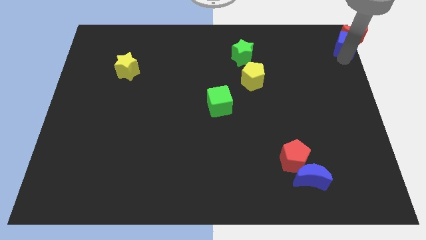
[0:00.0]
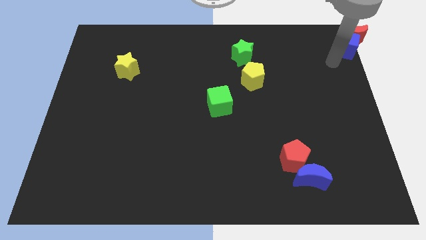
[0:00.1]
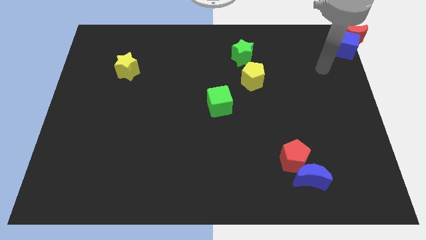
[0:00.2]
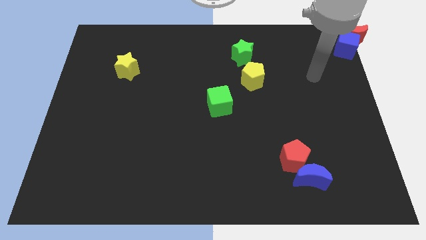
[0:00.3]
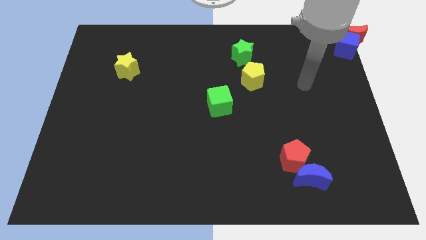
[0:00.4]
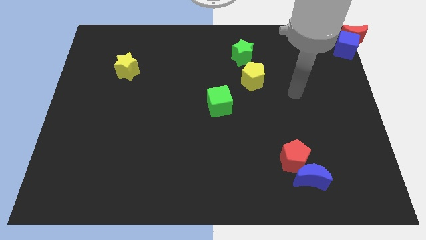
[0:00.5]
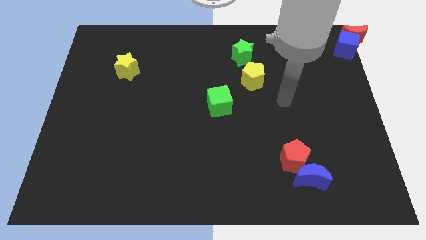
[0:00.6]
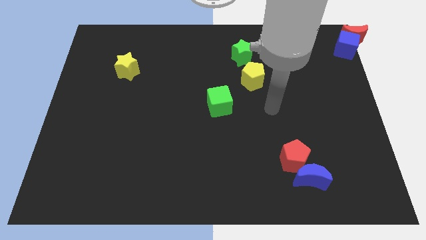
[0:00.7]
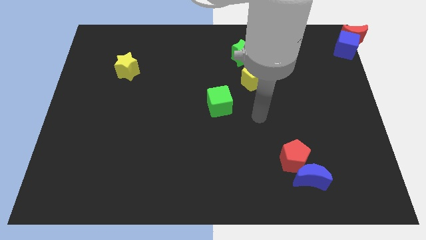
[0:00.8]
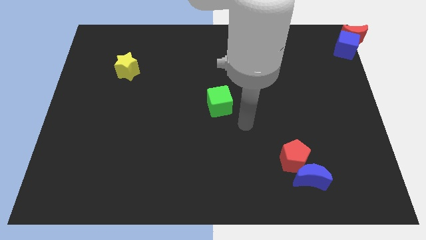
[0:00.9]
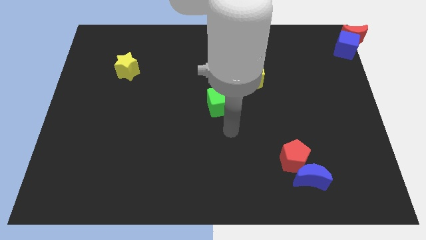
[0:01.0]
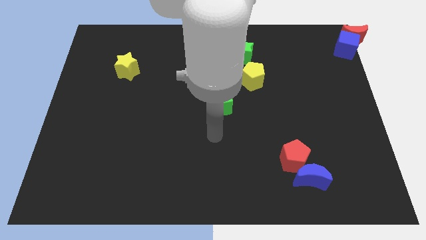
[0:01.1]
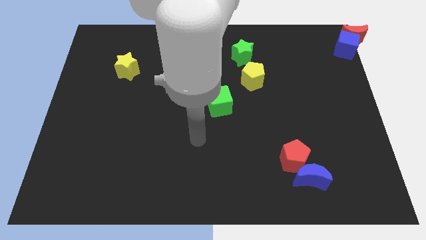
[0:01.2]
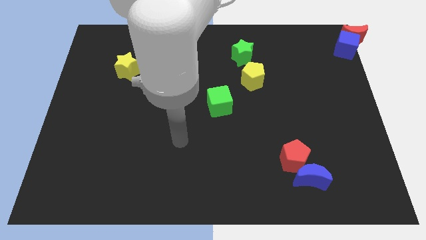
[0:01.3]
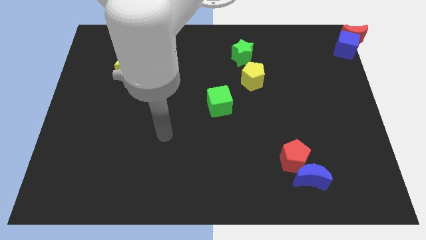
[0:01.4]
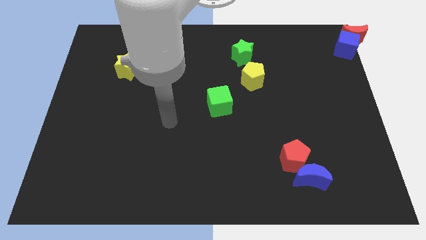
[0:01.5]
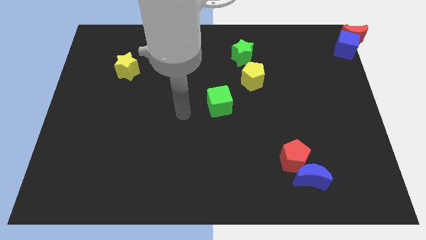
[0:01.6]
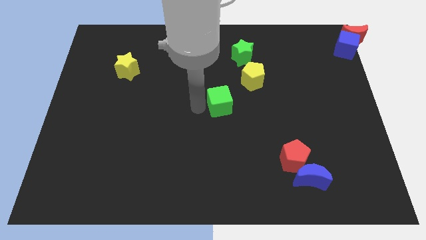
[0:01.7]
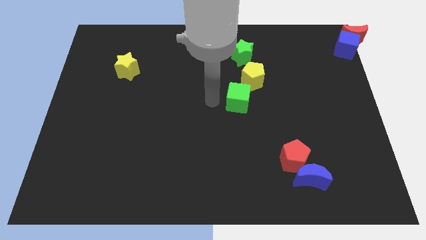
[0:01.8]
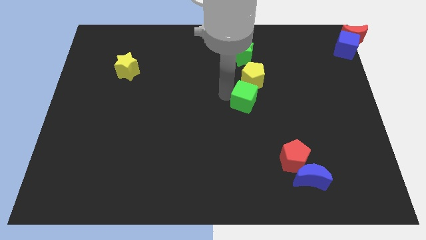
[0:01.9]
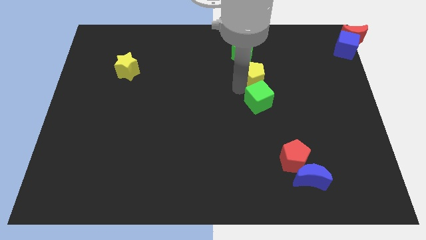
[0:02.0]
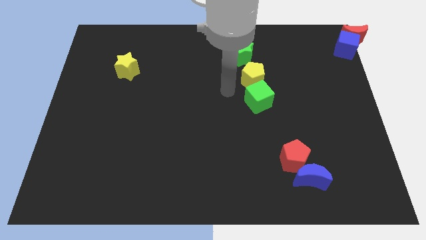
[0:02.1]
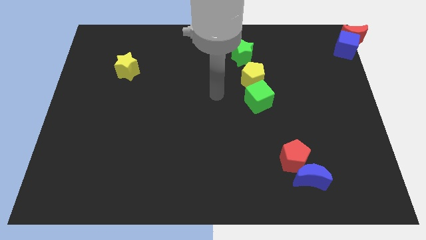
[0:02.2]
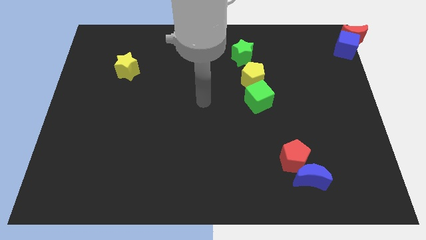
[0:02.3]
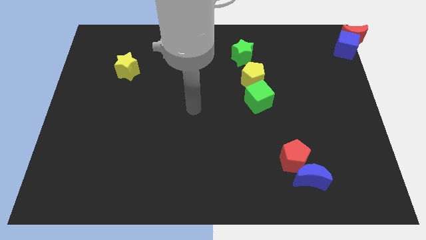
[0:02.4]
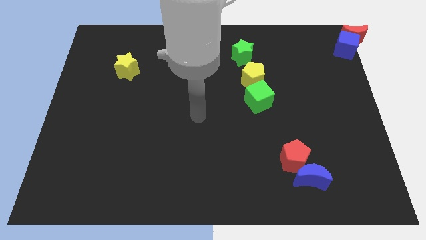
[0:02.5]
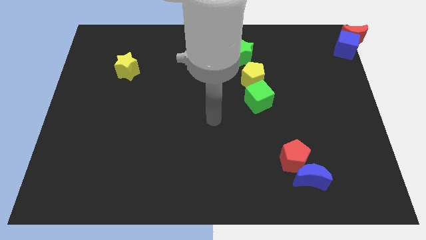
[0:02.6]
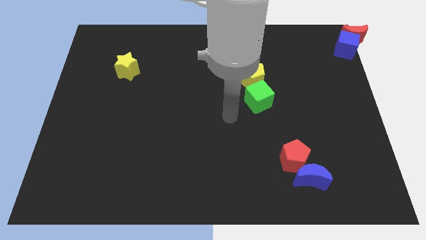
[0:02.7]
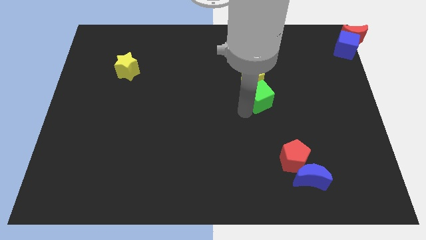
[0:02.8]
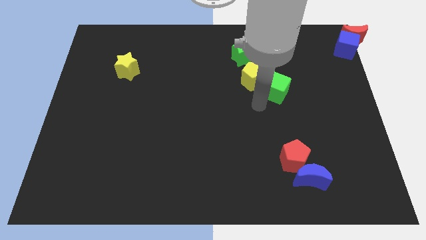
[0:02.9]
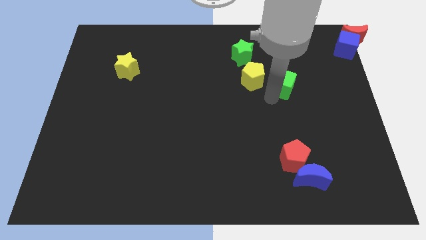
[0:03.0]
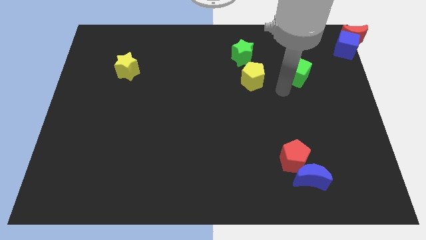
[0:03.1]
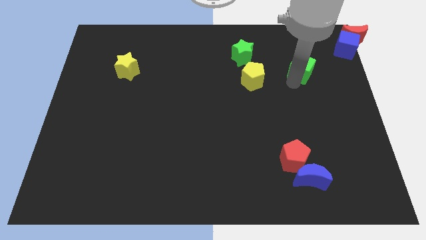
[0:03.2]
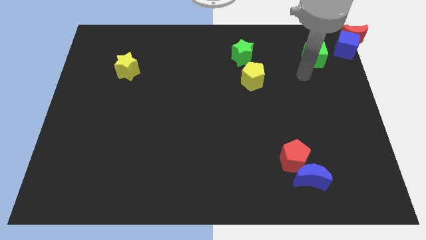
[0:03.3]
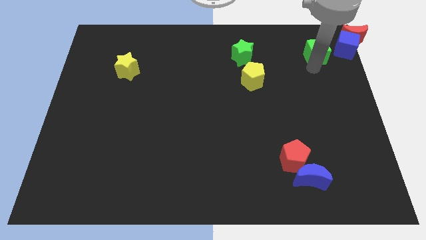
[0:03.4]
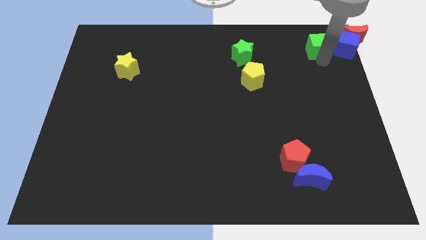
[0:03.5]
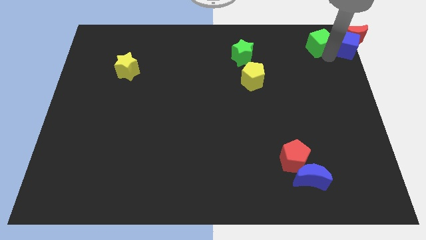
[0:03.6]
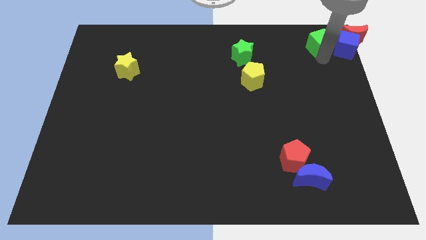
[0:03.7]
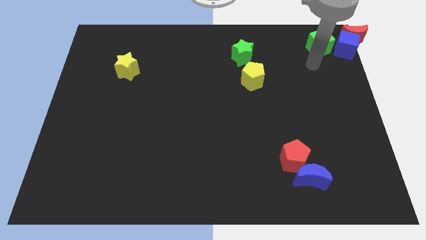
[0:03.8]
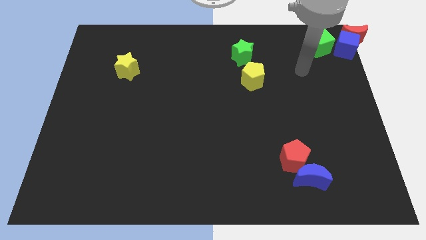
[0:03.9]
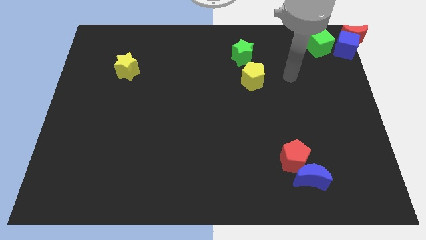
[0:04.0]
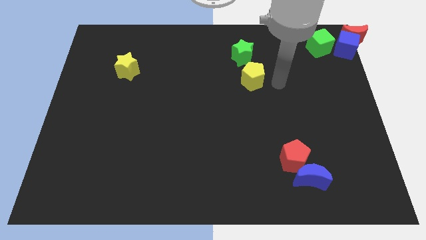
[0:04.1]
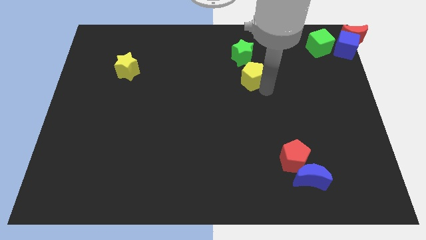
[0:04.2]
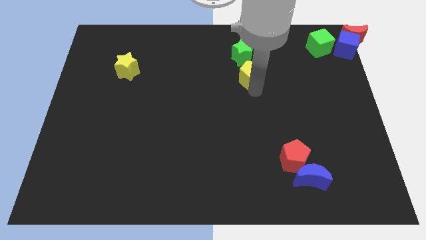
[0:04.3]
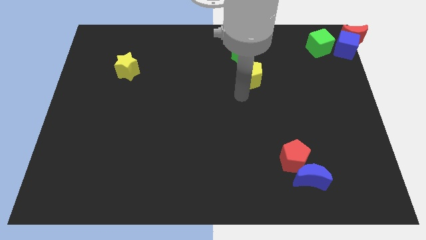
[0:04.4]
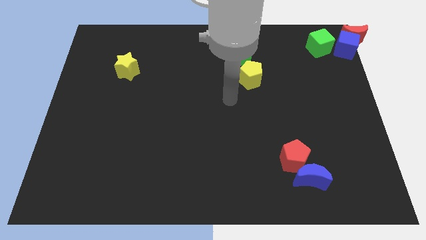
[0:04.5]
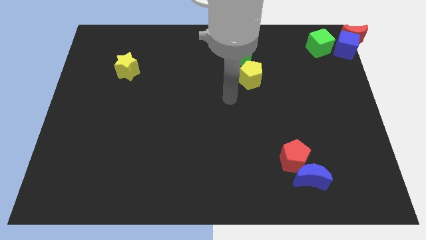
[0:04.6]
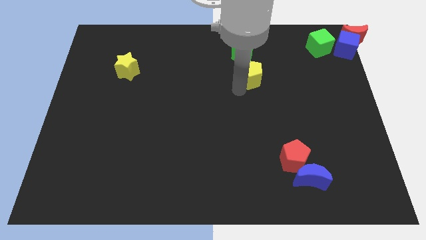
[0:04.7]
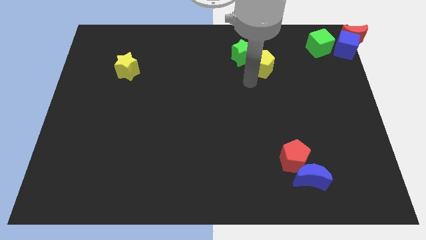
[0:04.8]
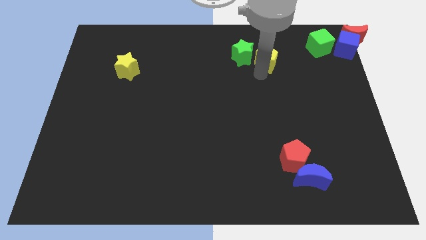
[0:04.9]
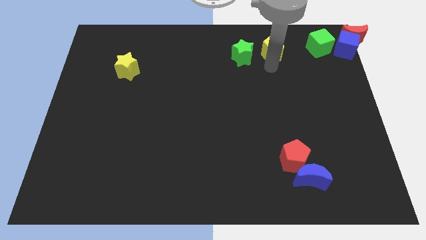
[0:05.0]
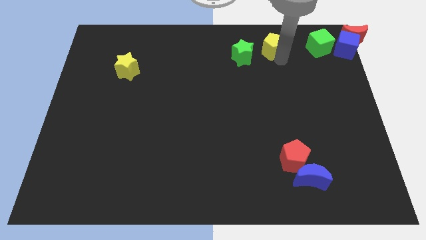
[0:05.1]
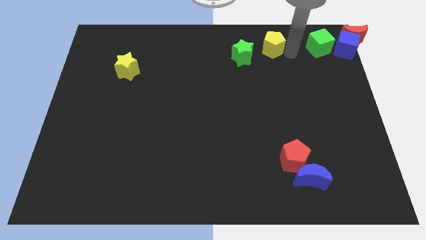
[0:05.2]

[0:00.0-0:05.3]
push the green cube to the left side of the blue cube

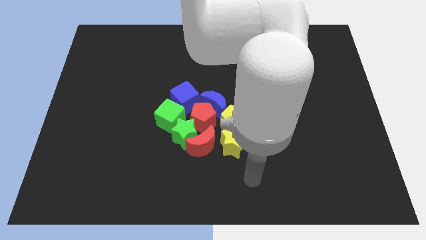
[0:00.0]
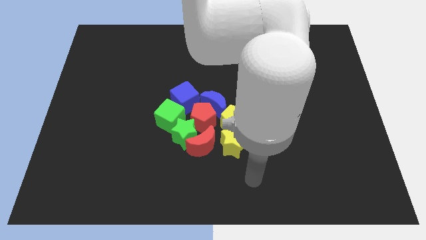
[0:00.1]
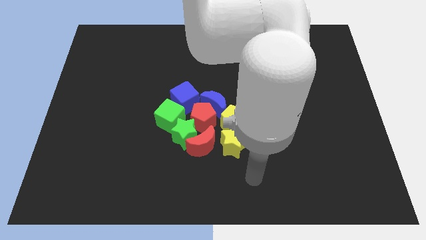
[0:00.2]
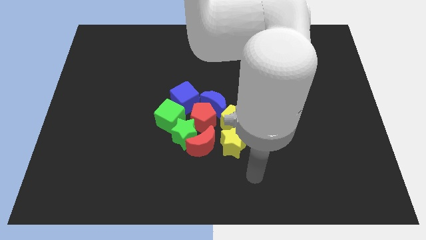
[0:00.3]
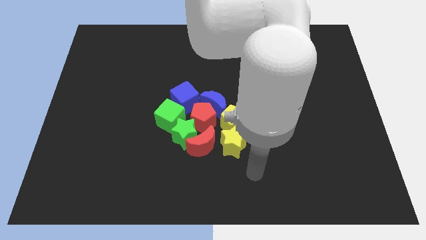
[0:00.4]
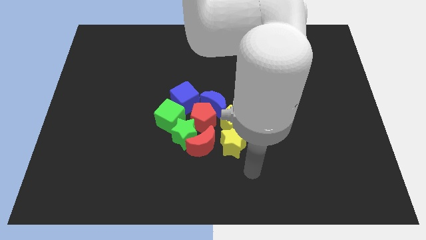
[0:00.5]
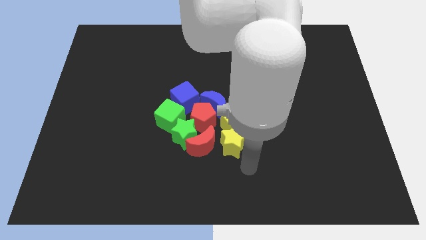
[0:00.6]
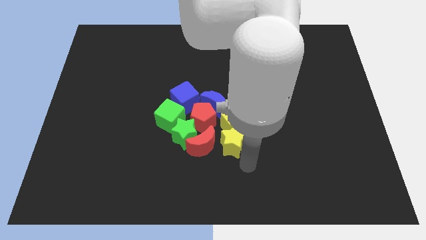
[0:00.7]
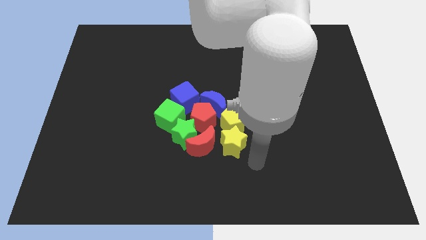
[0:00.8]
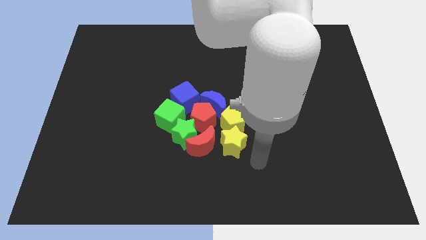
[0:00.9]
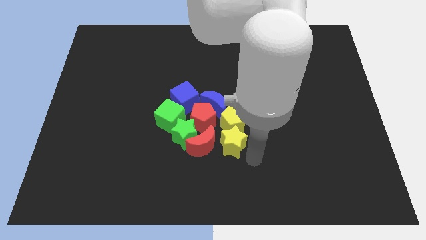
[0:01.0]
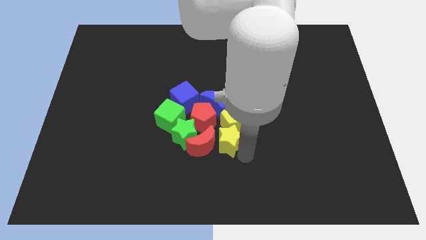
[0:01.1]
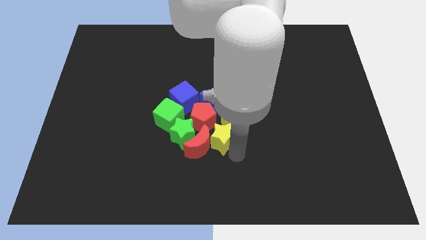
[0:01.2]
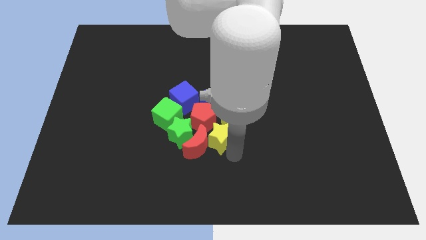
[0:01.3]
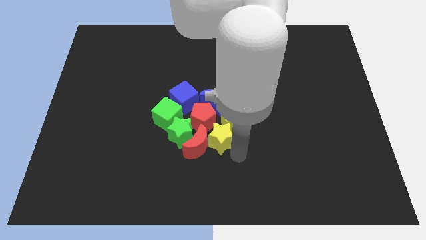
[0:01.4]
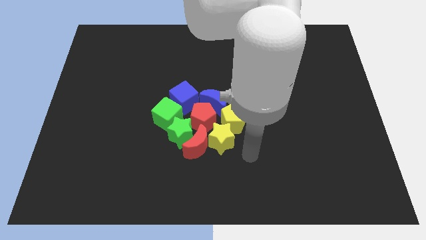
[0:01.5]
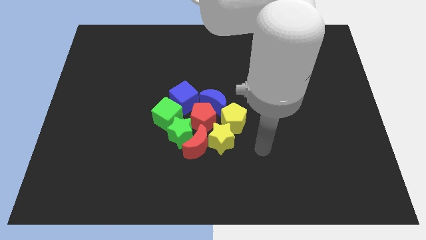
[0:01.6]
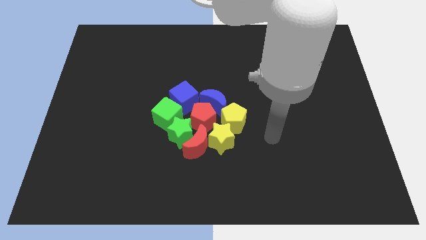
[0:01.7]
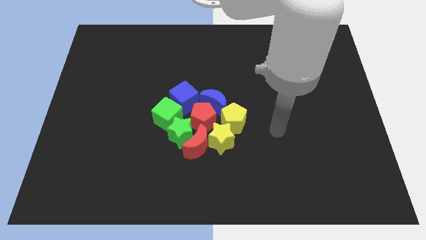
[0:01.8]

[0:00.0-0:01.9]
move the yellow star into the red crescent

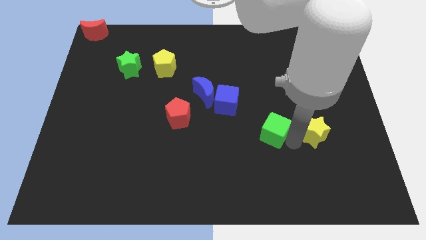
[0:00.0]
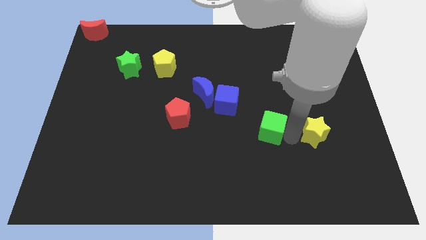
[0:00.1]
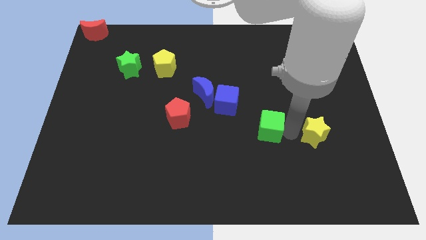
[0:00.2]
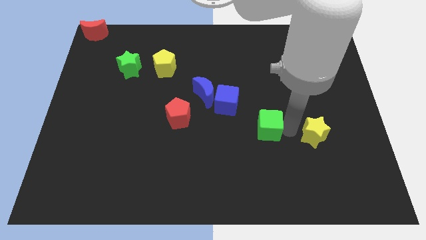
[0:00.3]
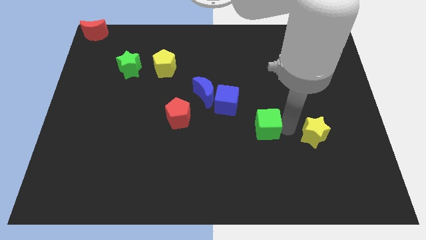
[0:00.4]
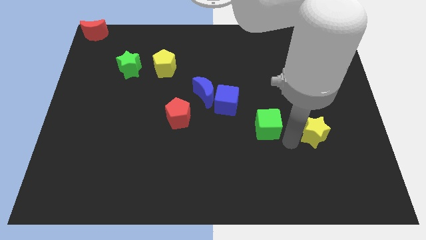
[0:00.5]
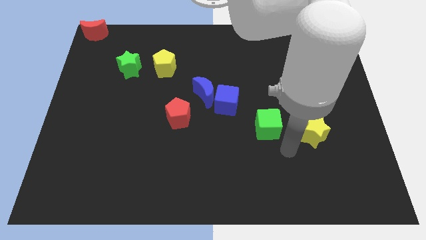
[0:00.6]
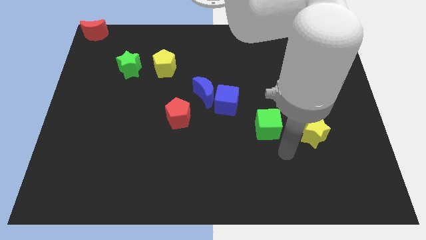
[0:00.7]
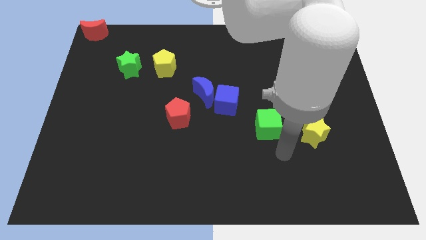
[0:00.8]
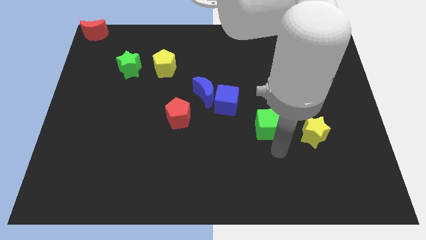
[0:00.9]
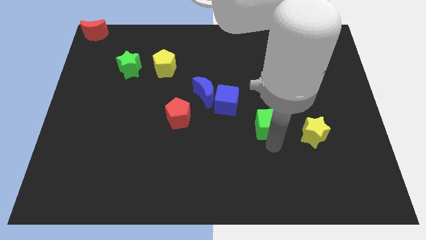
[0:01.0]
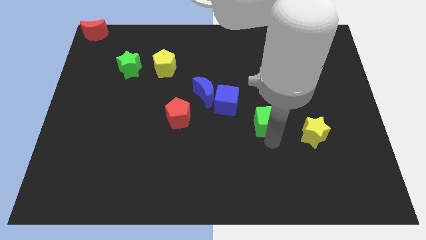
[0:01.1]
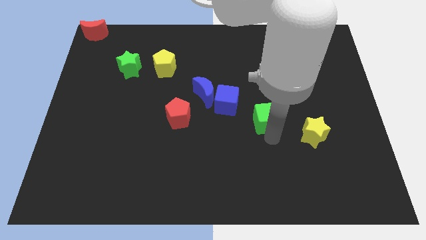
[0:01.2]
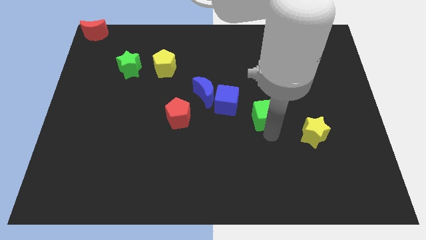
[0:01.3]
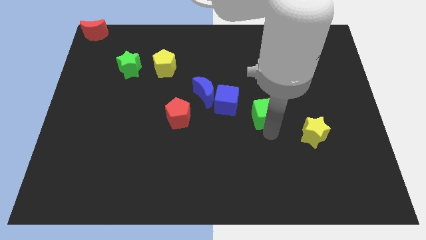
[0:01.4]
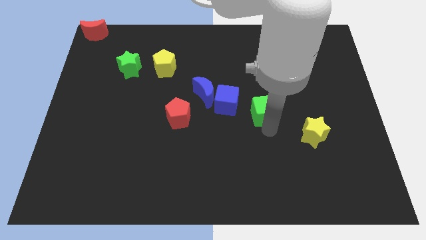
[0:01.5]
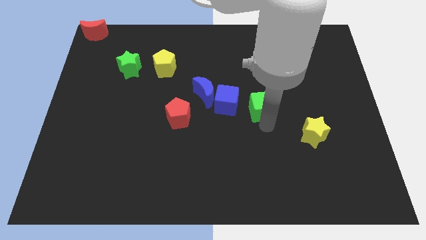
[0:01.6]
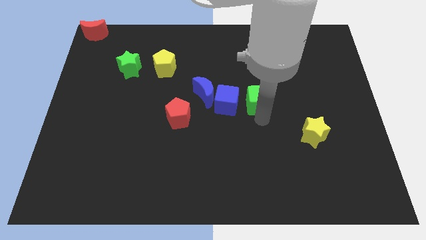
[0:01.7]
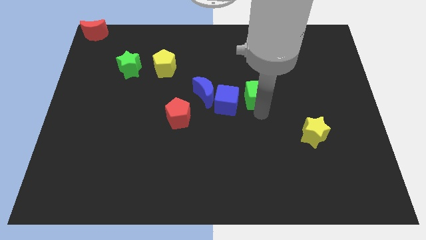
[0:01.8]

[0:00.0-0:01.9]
push green cube beside blue cube
